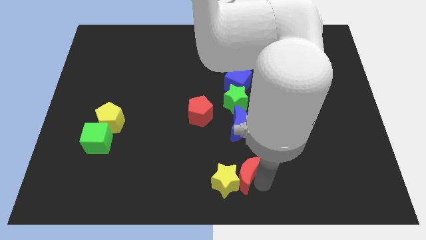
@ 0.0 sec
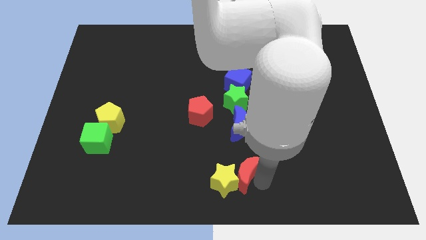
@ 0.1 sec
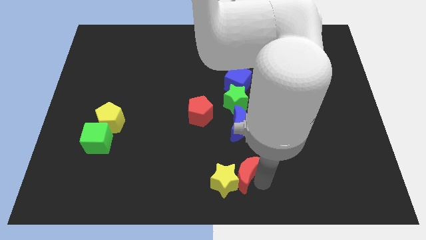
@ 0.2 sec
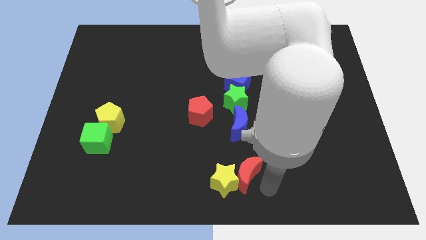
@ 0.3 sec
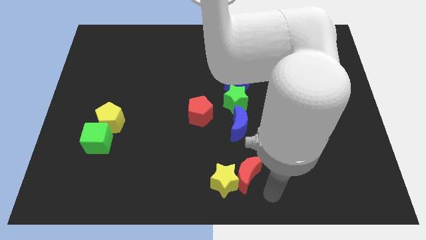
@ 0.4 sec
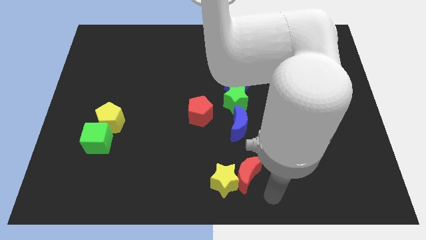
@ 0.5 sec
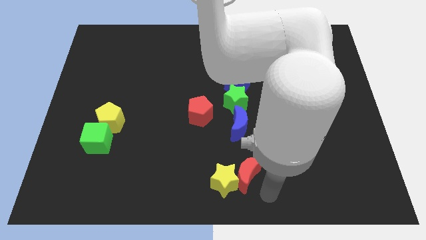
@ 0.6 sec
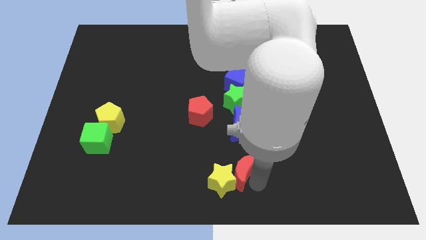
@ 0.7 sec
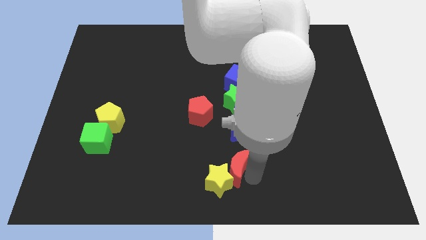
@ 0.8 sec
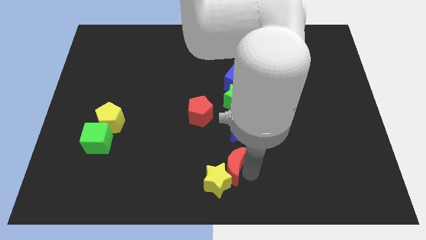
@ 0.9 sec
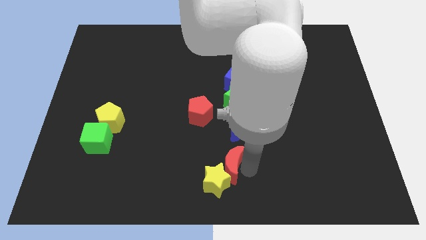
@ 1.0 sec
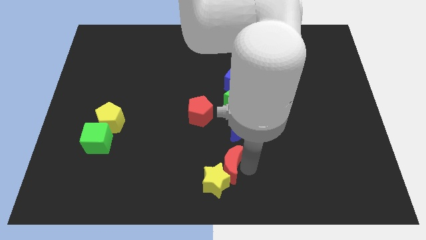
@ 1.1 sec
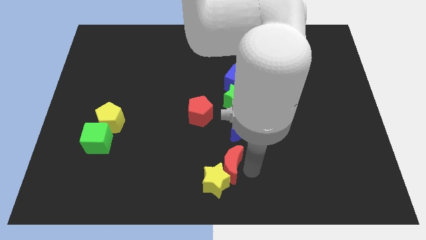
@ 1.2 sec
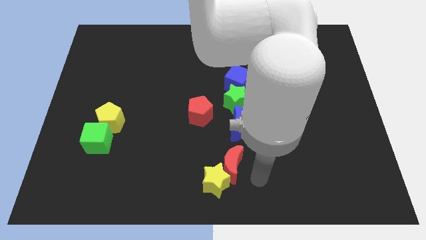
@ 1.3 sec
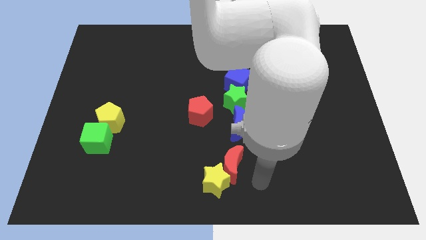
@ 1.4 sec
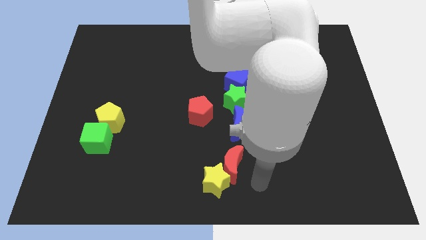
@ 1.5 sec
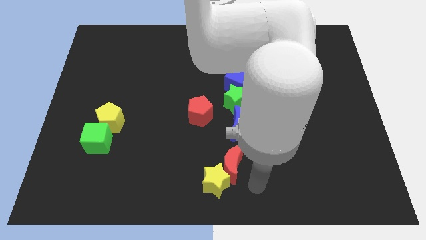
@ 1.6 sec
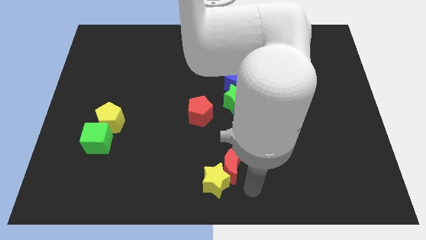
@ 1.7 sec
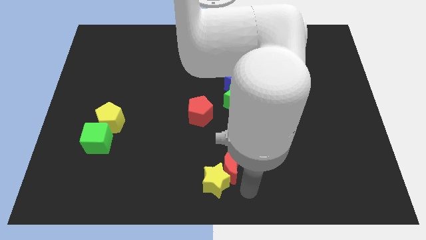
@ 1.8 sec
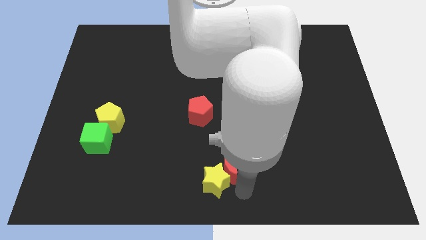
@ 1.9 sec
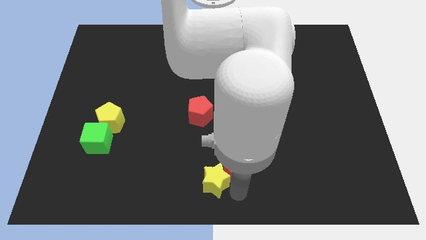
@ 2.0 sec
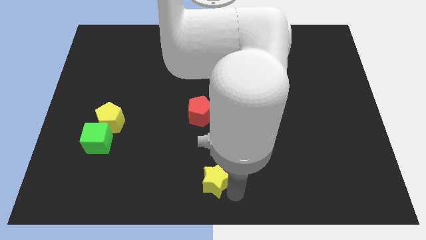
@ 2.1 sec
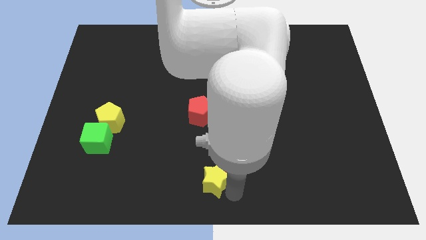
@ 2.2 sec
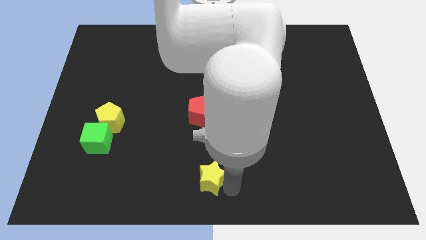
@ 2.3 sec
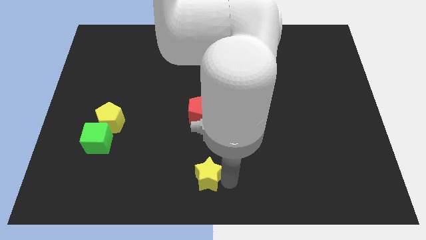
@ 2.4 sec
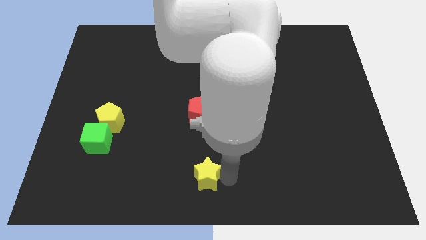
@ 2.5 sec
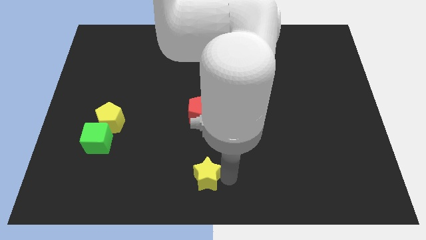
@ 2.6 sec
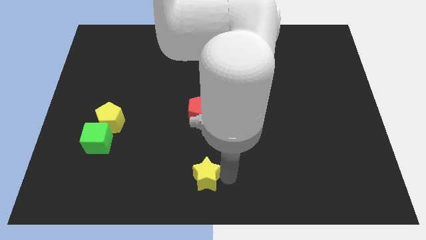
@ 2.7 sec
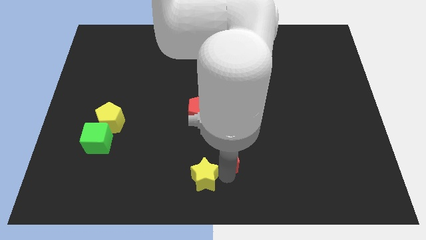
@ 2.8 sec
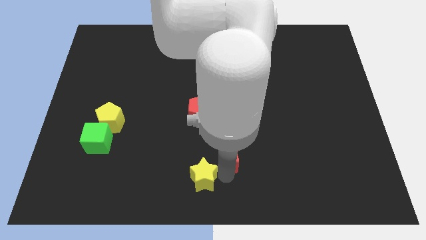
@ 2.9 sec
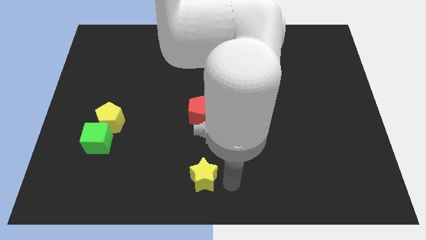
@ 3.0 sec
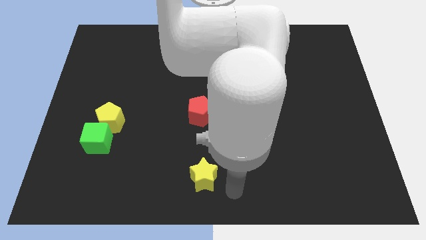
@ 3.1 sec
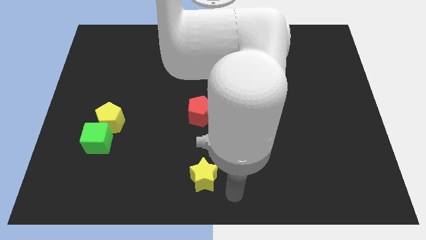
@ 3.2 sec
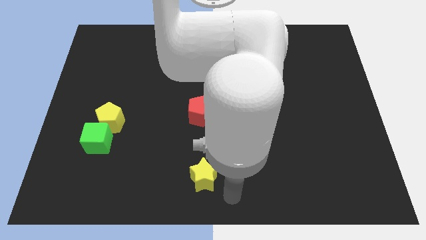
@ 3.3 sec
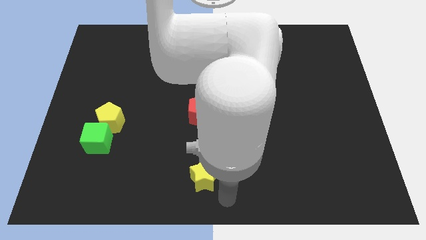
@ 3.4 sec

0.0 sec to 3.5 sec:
place red moon below blue moon

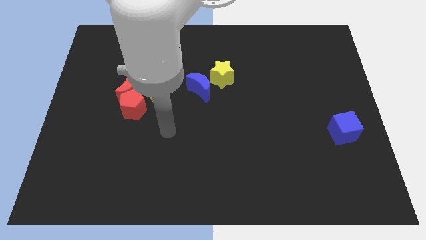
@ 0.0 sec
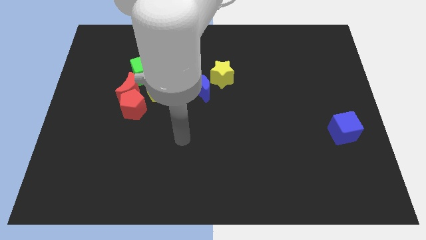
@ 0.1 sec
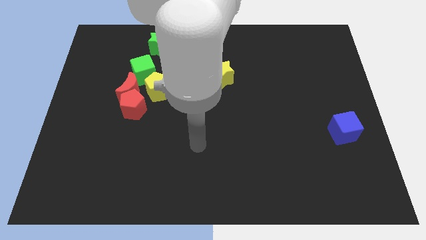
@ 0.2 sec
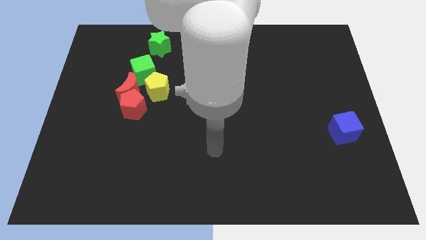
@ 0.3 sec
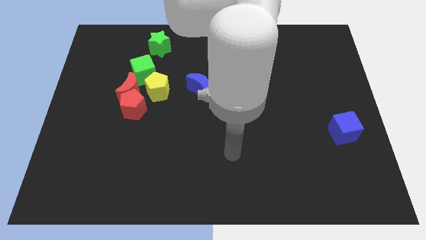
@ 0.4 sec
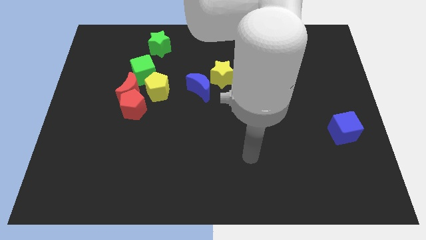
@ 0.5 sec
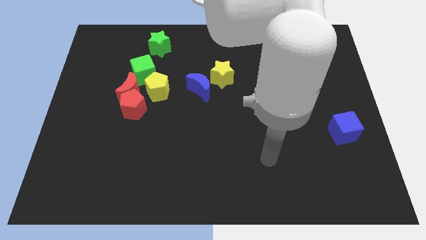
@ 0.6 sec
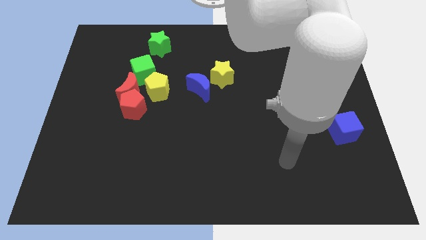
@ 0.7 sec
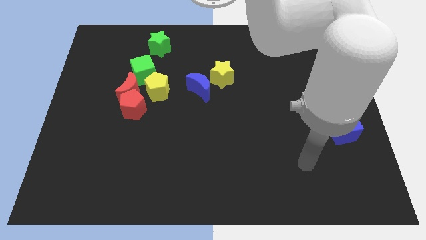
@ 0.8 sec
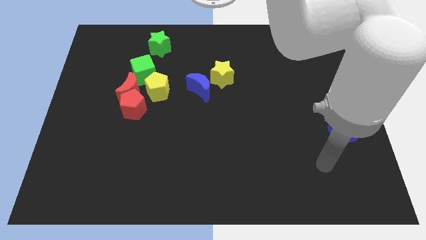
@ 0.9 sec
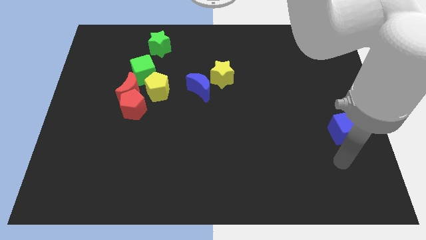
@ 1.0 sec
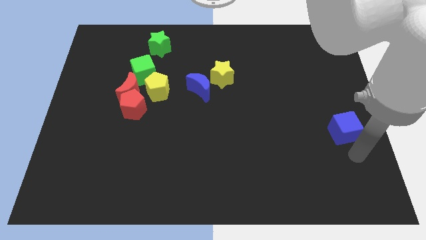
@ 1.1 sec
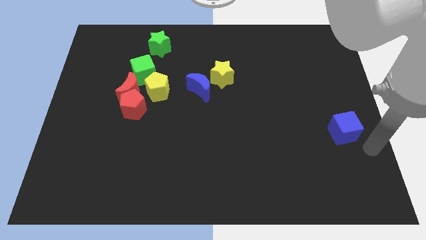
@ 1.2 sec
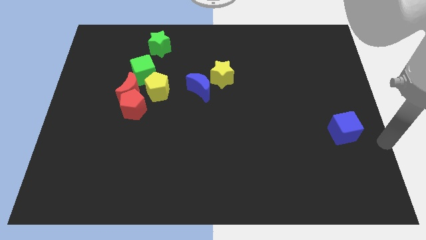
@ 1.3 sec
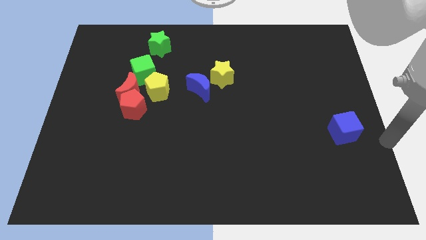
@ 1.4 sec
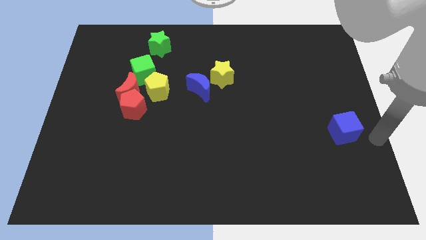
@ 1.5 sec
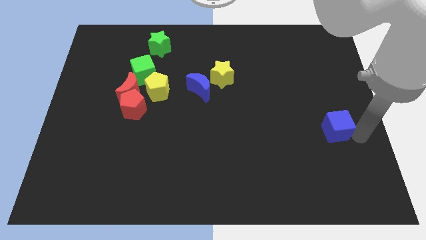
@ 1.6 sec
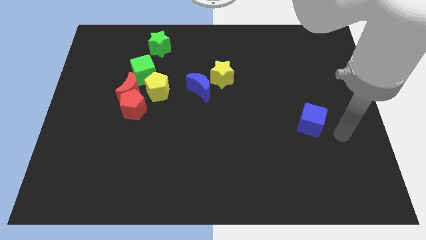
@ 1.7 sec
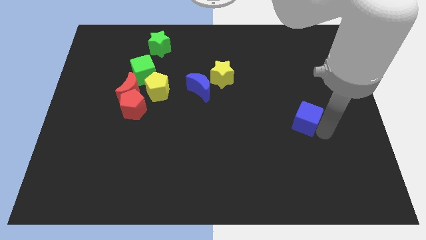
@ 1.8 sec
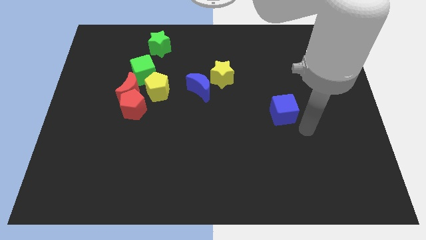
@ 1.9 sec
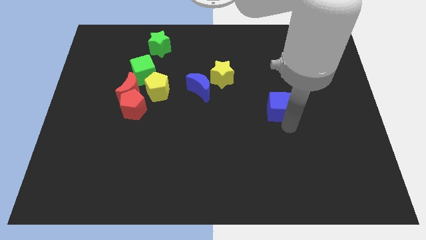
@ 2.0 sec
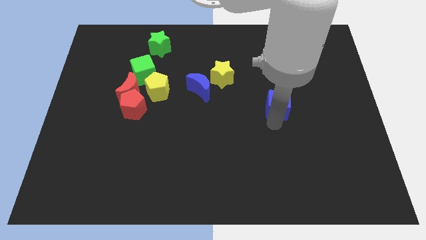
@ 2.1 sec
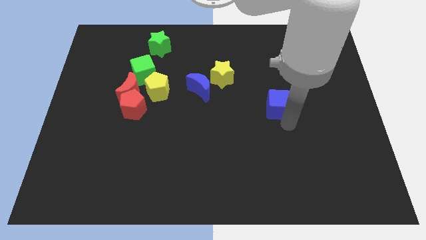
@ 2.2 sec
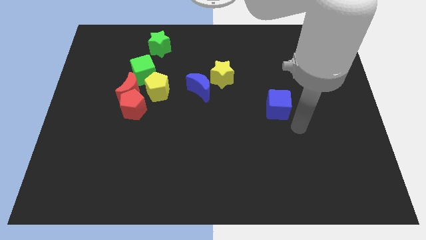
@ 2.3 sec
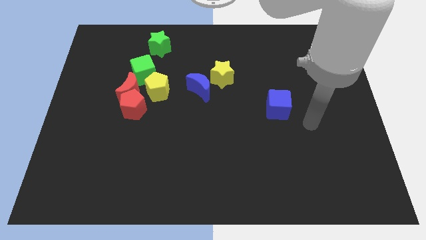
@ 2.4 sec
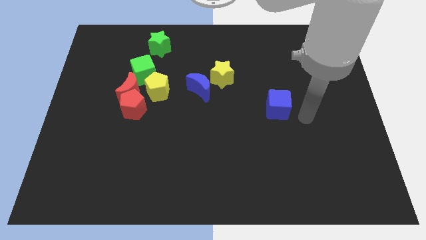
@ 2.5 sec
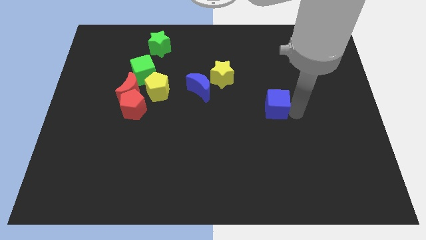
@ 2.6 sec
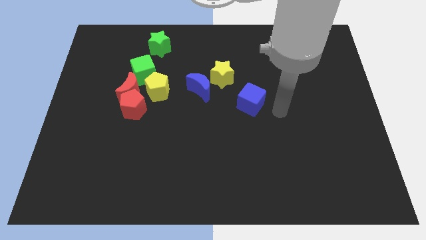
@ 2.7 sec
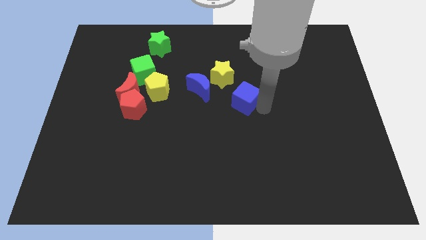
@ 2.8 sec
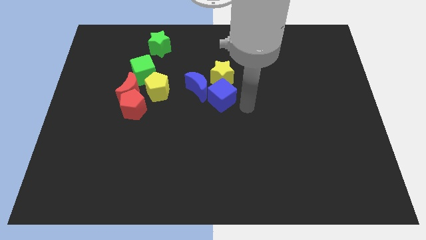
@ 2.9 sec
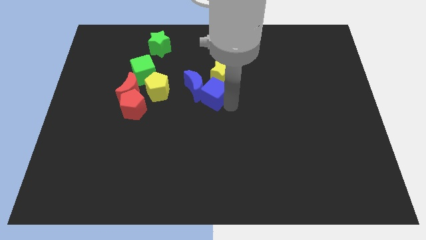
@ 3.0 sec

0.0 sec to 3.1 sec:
place the blue cube below the yellow star

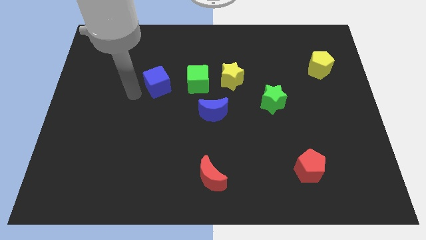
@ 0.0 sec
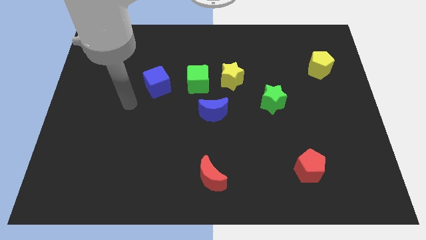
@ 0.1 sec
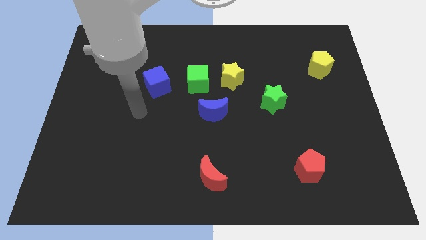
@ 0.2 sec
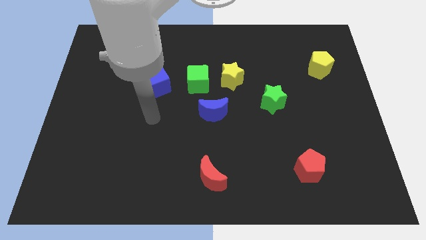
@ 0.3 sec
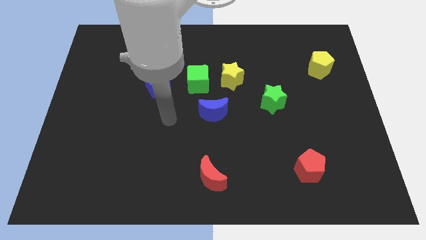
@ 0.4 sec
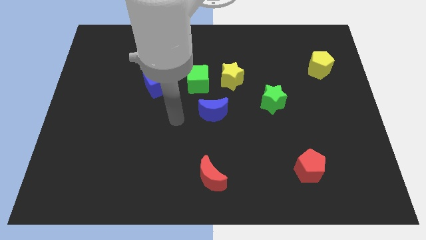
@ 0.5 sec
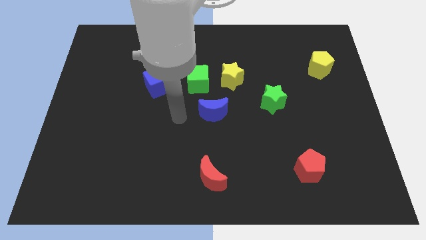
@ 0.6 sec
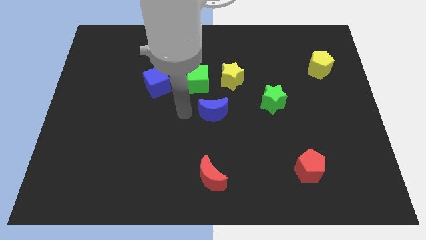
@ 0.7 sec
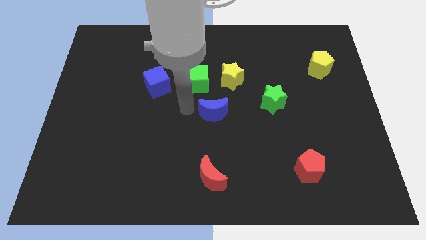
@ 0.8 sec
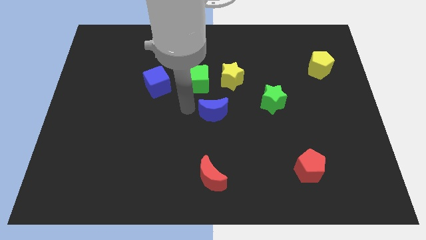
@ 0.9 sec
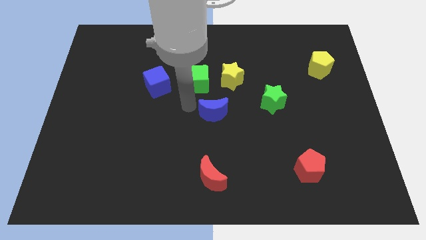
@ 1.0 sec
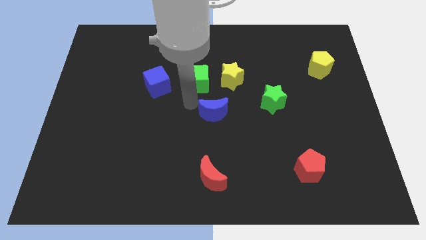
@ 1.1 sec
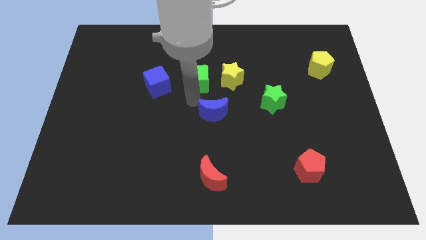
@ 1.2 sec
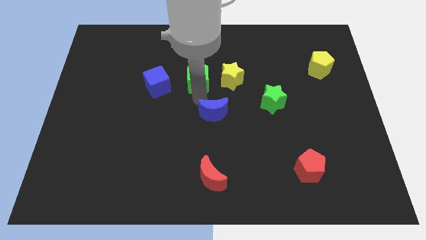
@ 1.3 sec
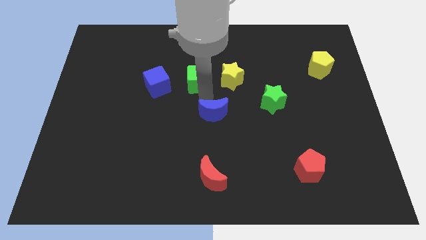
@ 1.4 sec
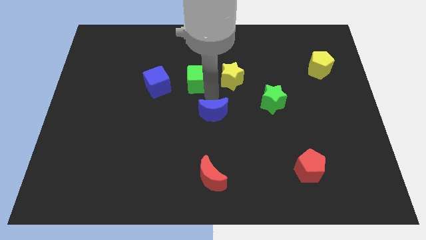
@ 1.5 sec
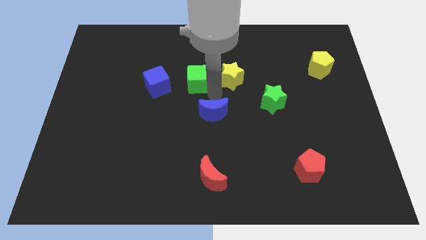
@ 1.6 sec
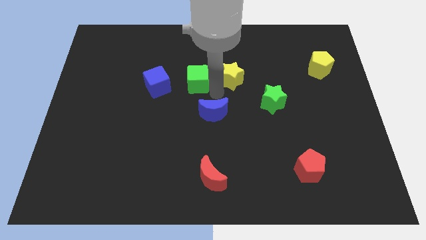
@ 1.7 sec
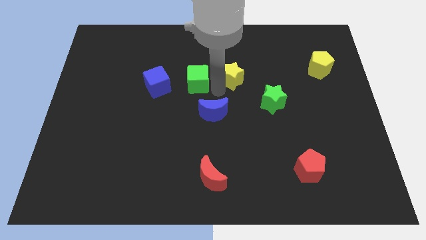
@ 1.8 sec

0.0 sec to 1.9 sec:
move the arm to the bottom of the yellow star

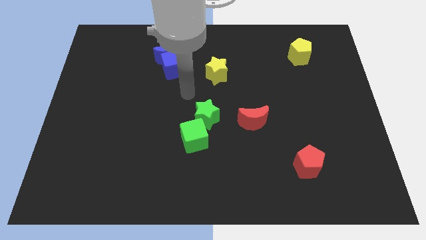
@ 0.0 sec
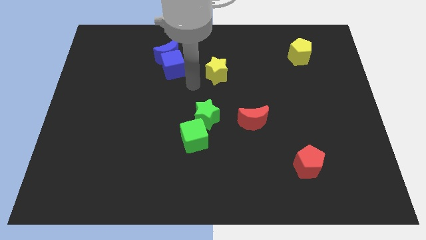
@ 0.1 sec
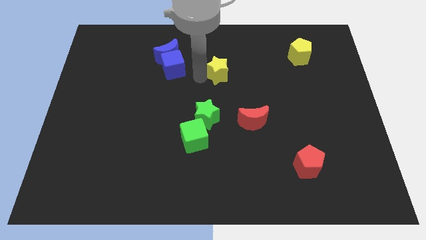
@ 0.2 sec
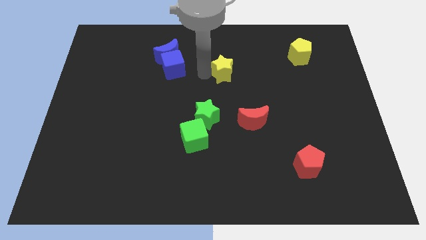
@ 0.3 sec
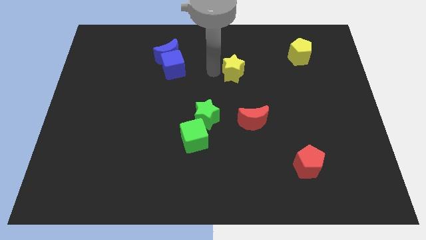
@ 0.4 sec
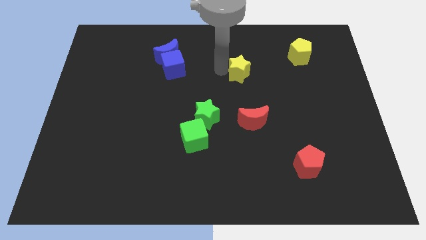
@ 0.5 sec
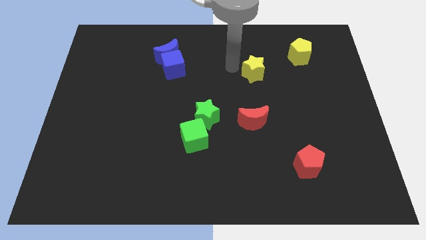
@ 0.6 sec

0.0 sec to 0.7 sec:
move the yellow star above the red crescent
